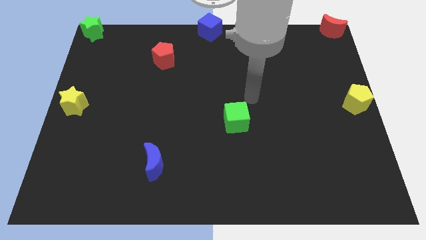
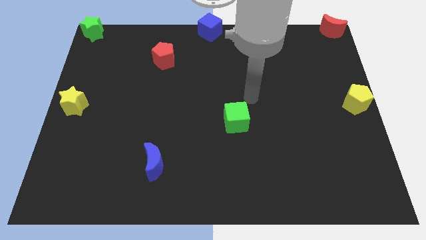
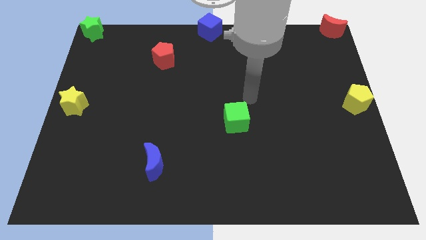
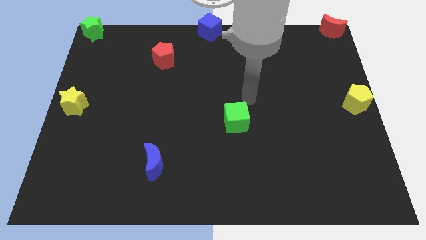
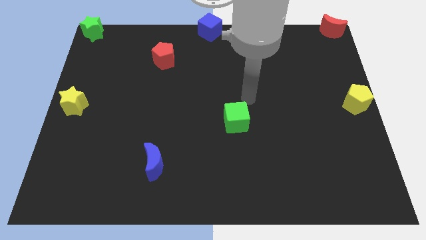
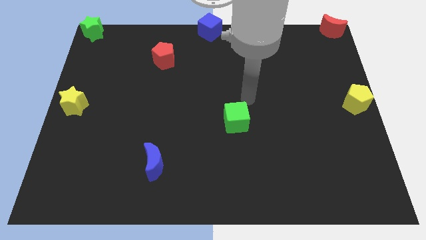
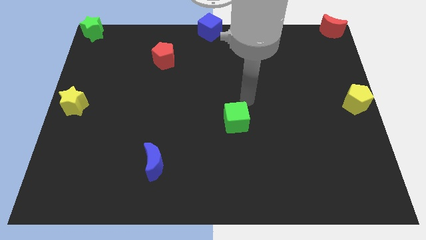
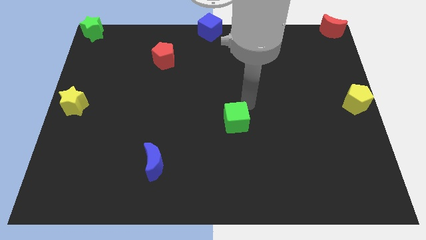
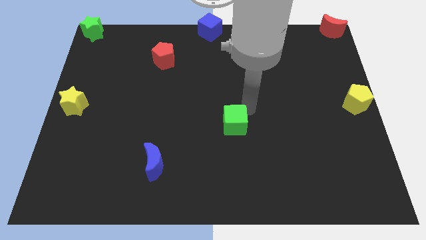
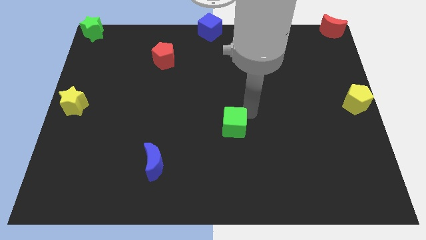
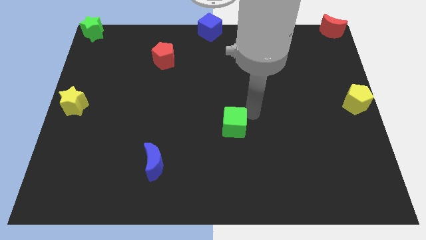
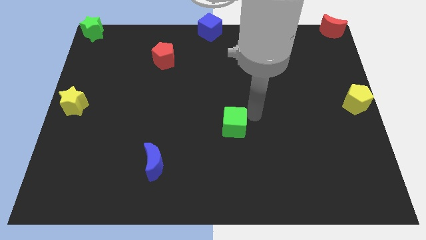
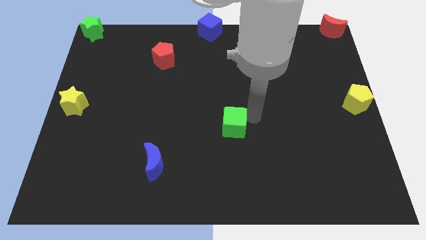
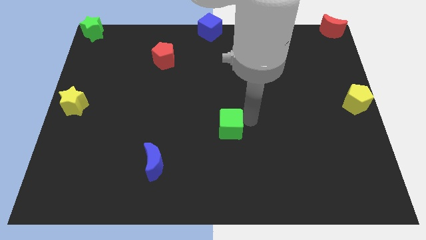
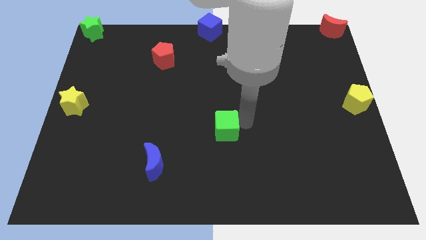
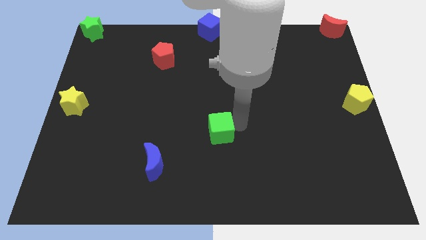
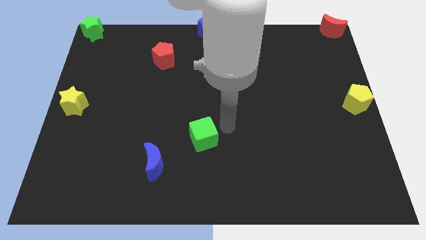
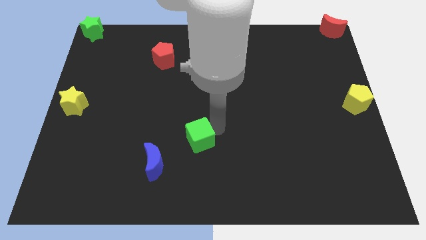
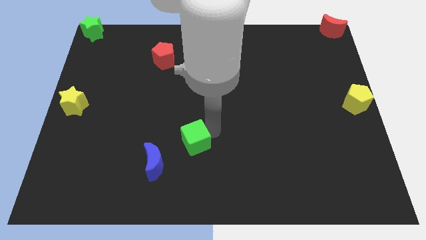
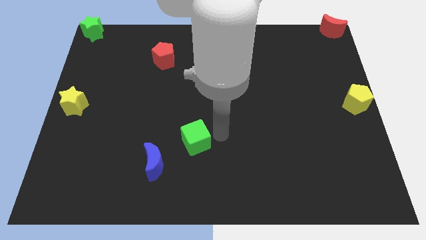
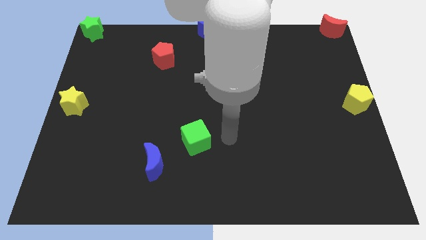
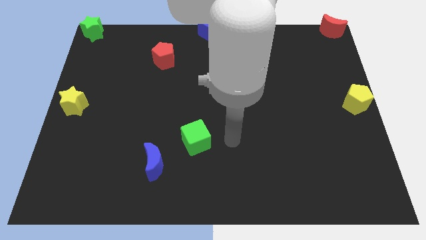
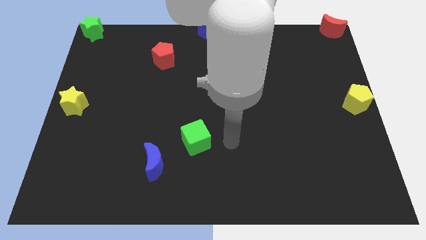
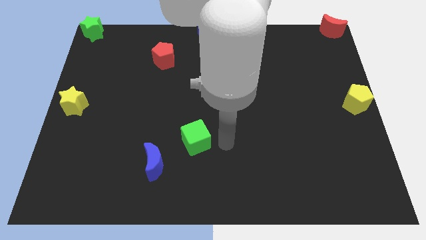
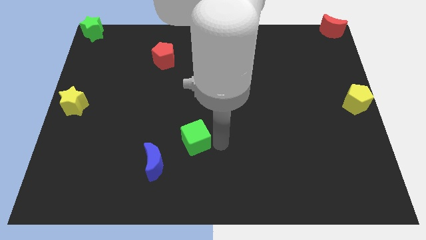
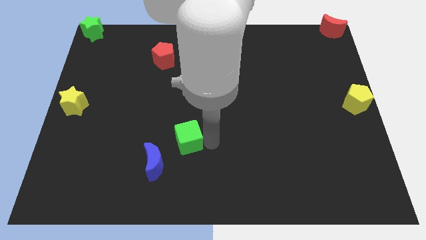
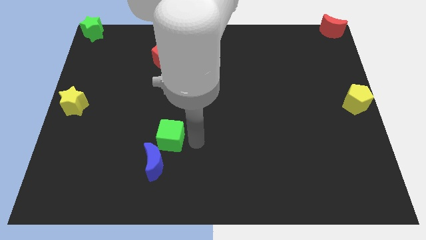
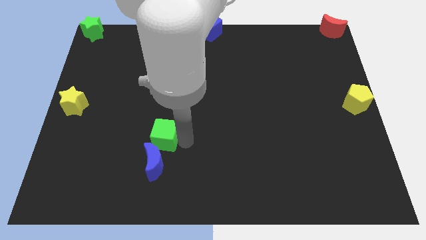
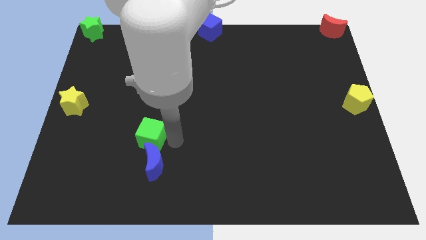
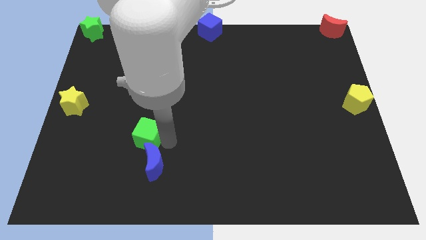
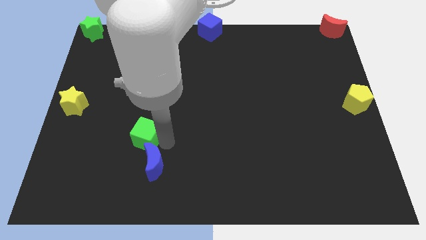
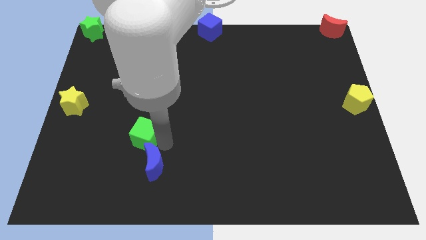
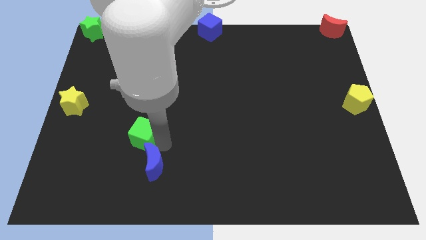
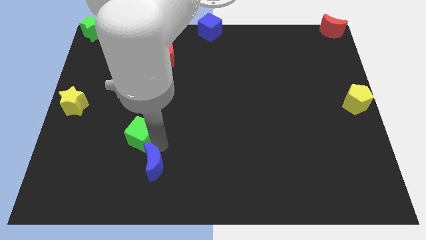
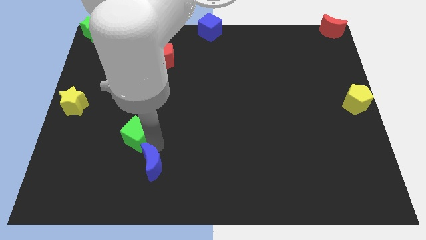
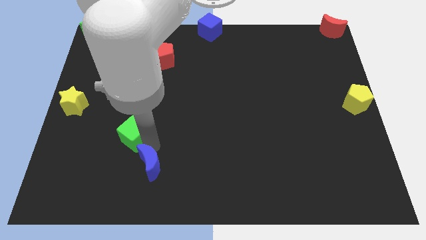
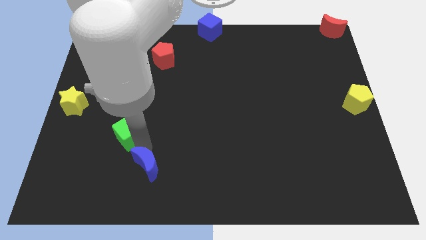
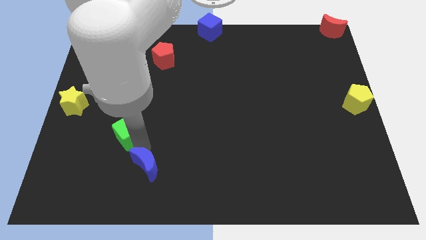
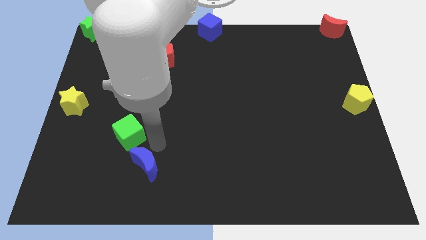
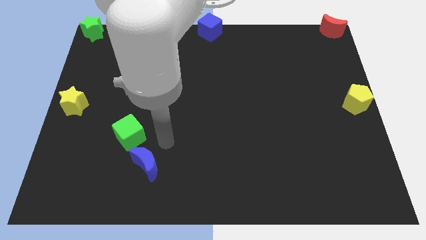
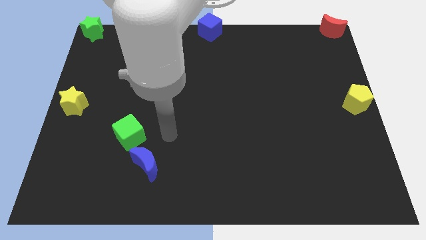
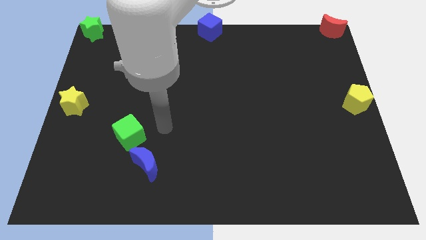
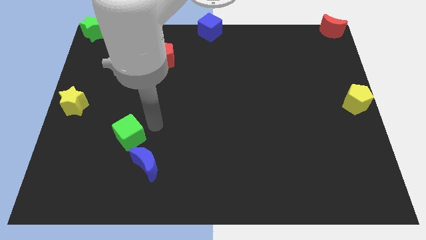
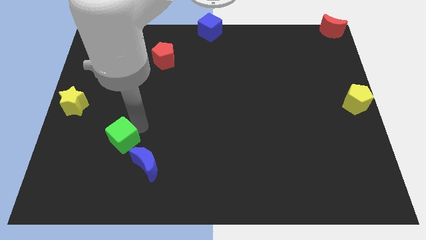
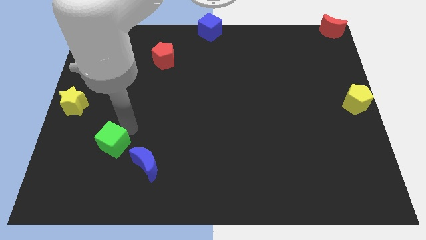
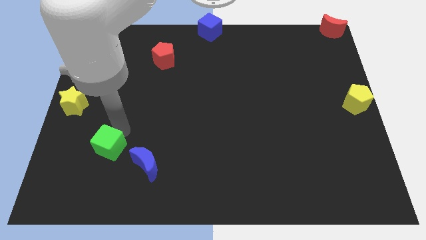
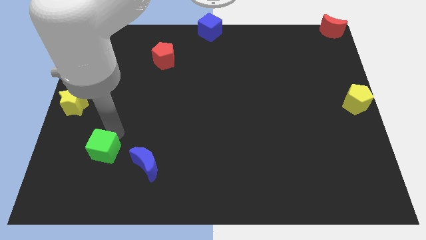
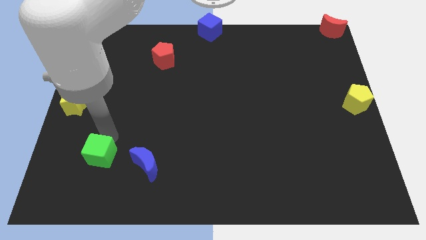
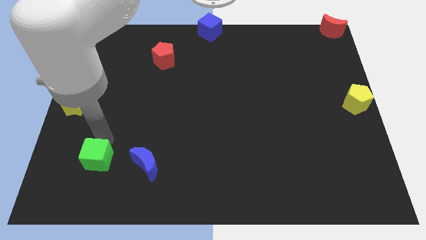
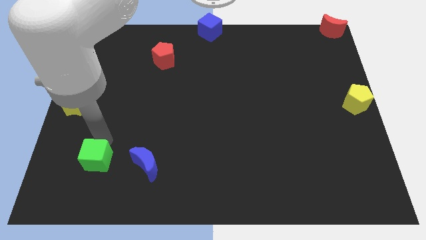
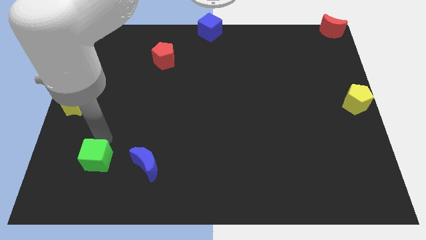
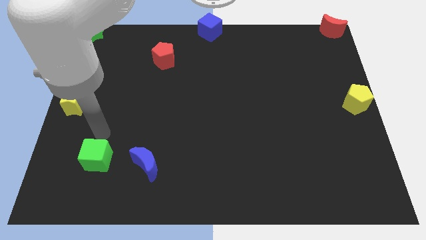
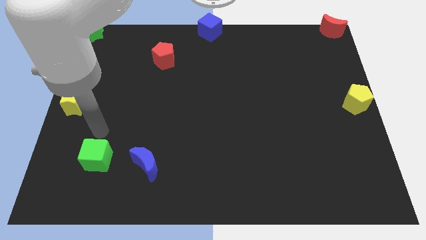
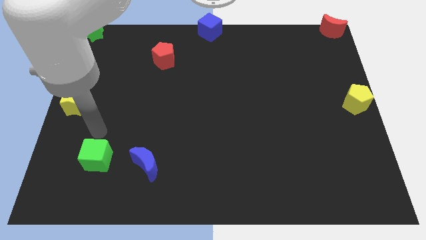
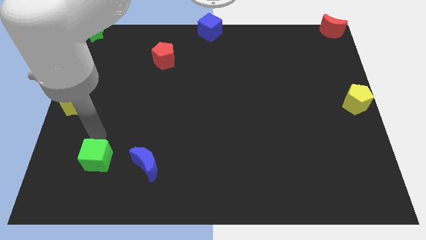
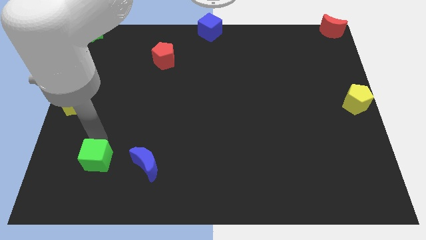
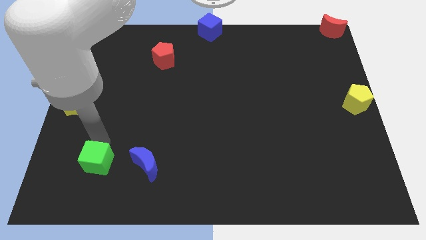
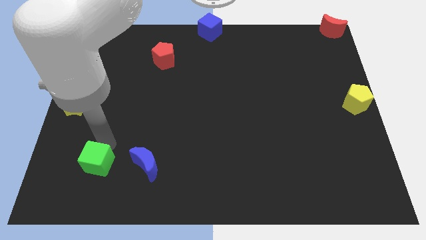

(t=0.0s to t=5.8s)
move the green cube to the left side of the blue moon

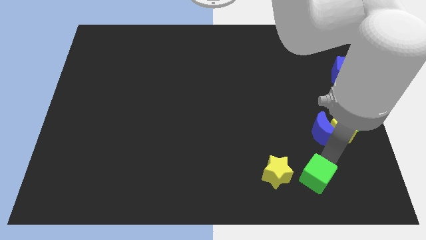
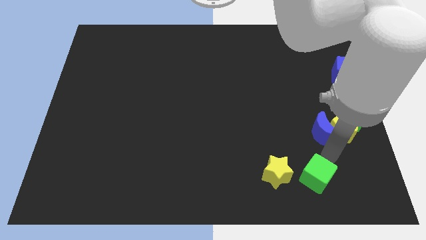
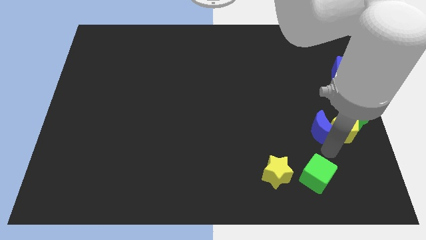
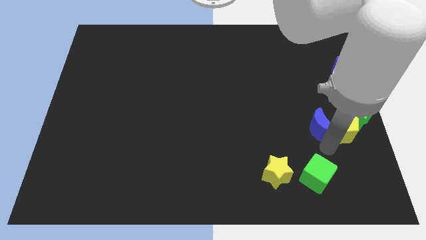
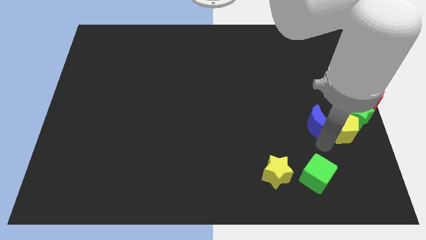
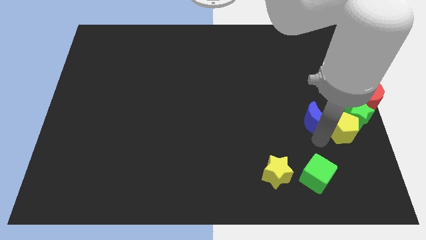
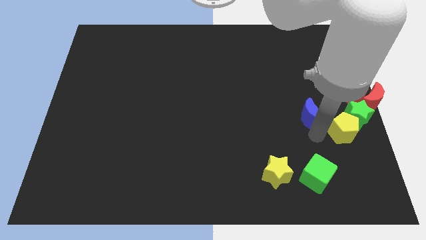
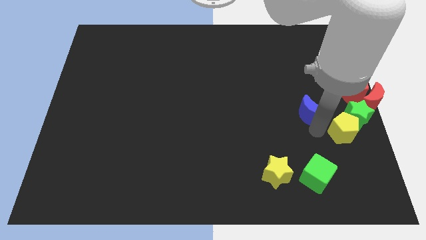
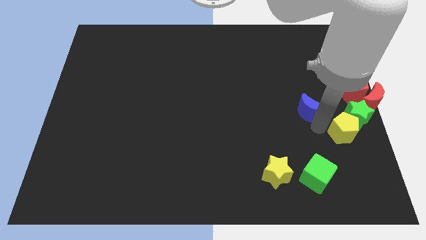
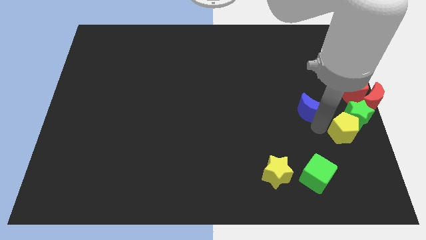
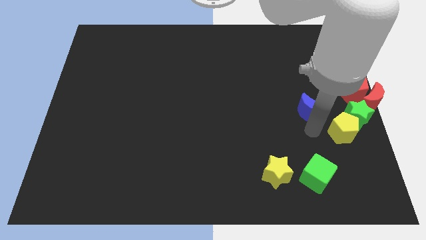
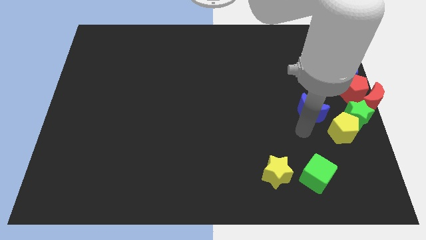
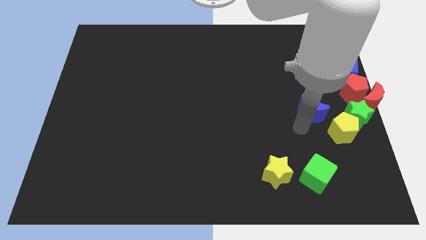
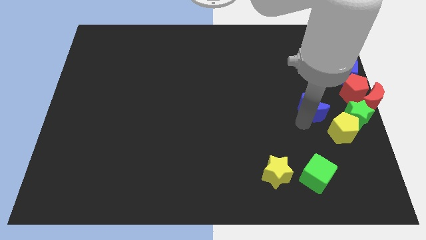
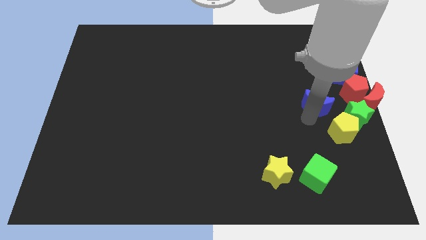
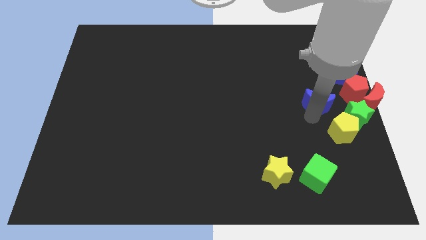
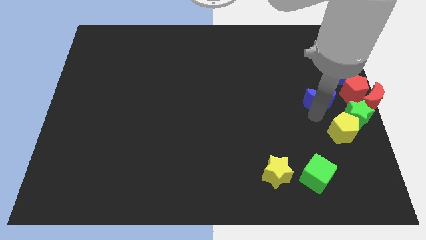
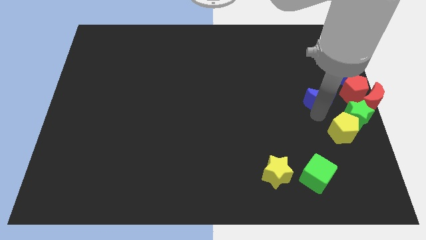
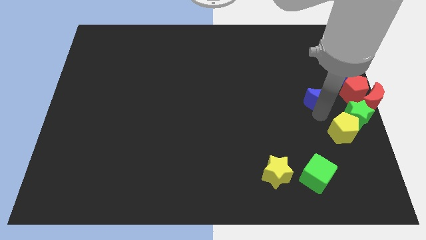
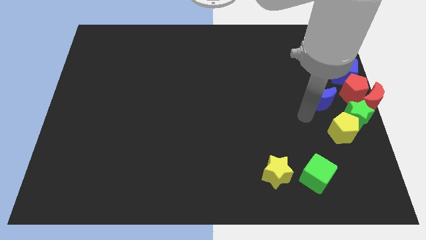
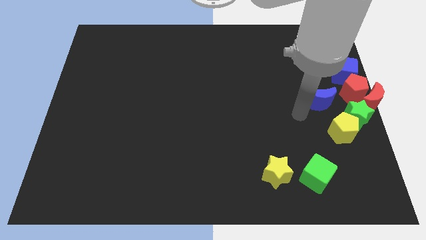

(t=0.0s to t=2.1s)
move blue moon up to the left of red moon

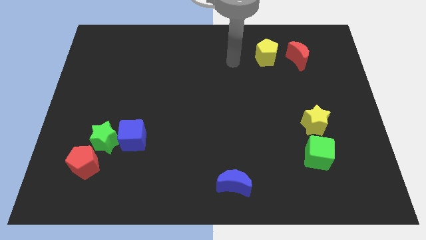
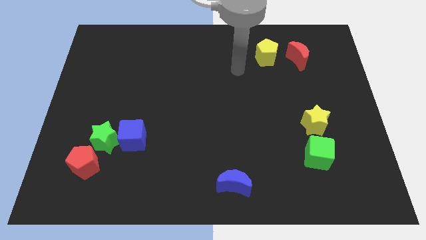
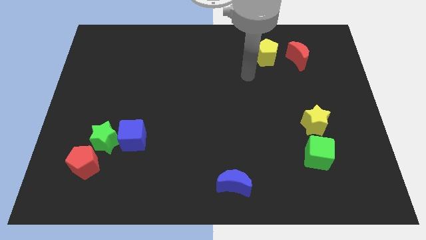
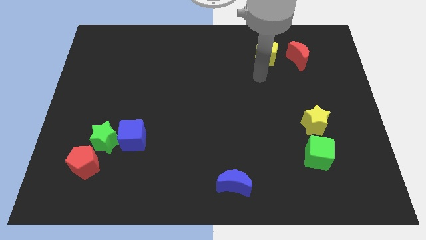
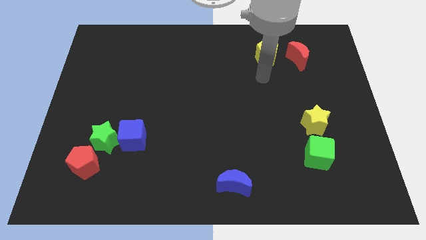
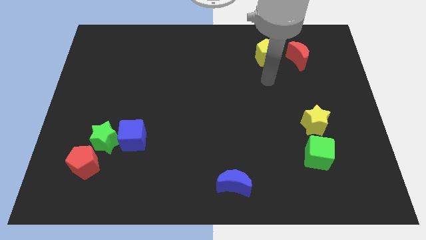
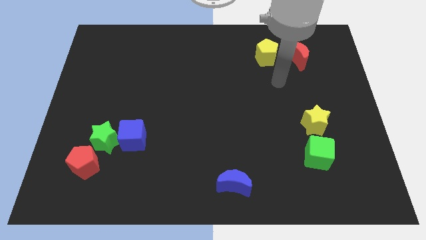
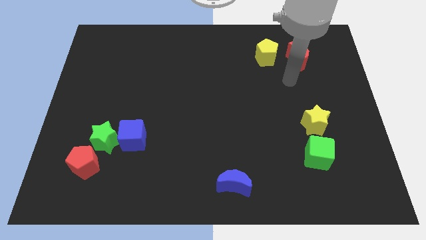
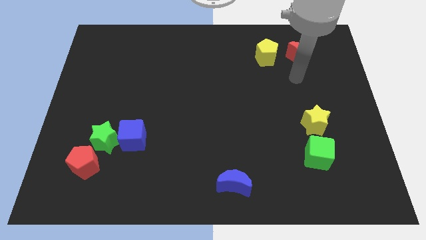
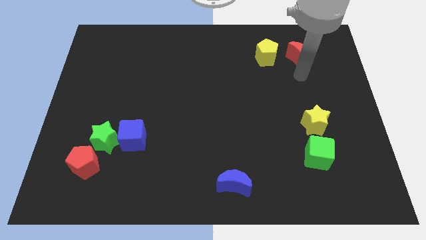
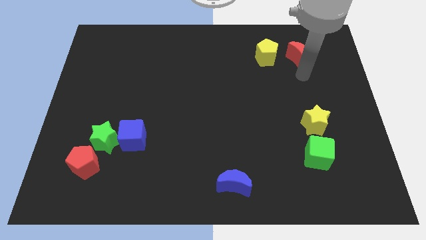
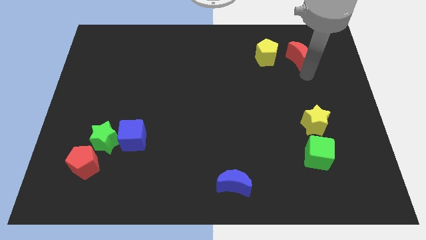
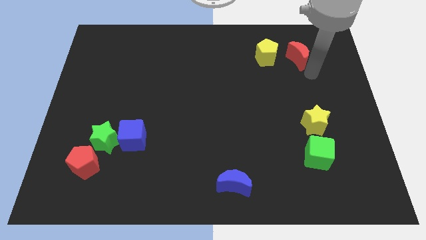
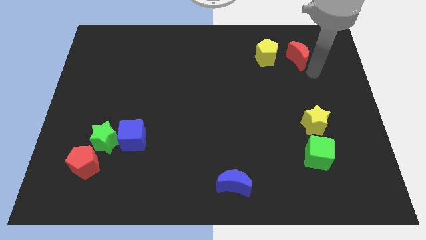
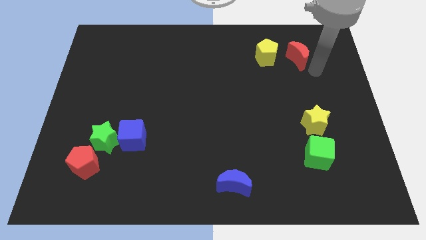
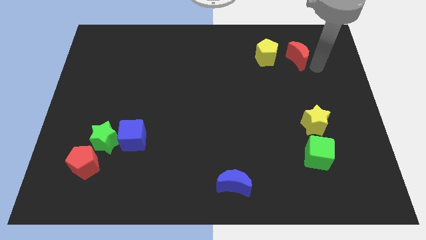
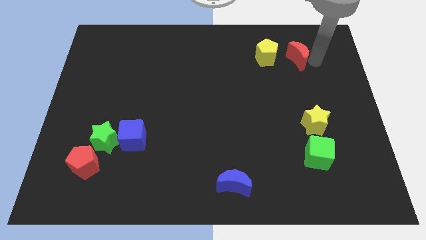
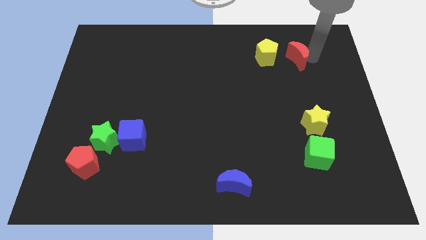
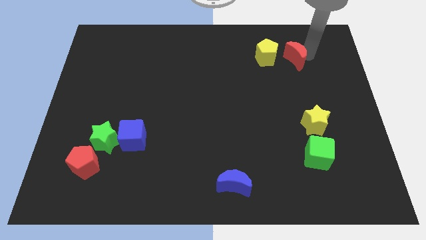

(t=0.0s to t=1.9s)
go near the red moon
